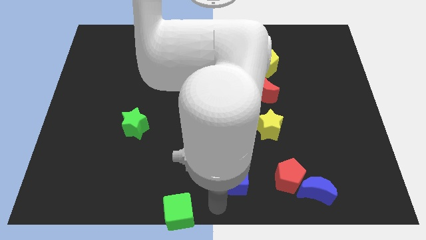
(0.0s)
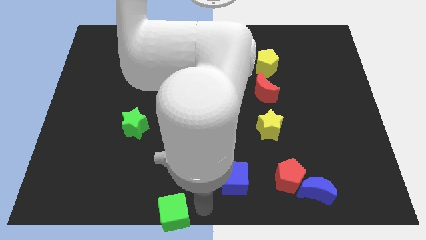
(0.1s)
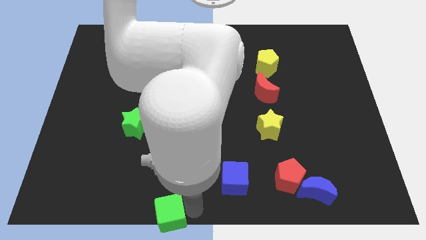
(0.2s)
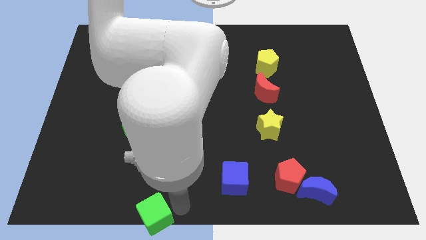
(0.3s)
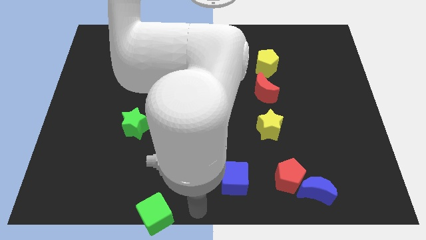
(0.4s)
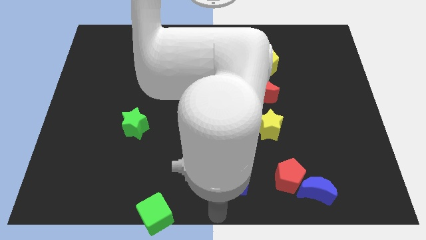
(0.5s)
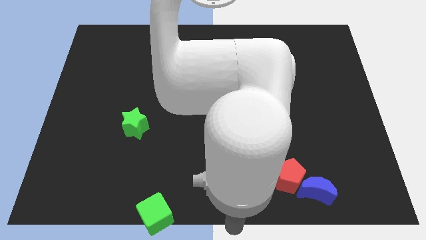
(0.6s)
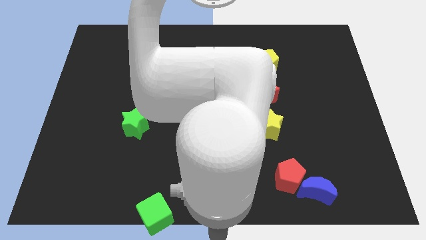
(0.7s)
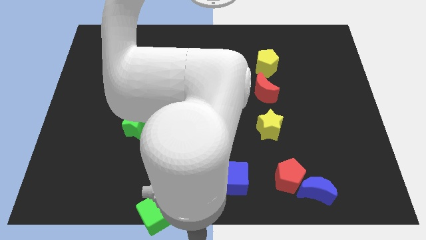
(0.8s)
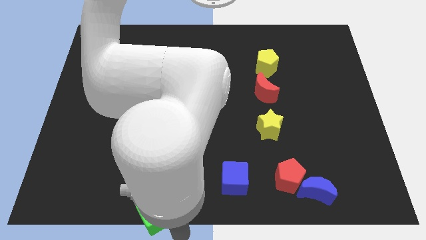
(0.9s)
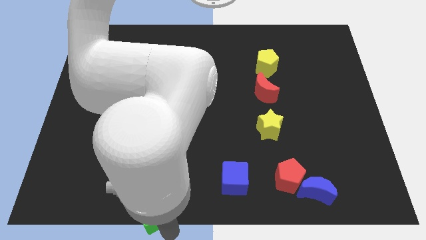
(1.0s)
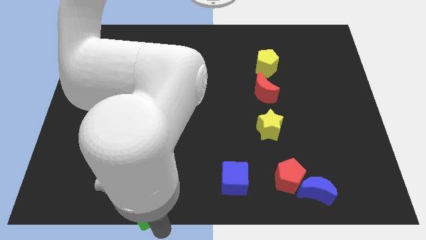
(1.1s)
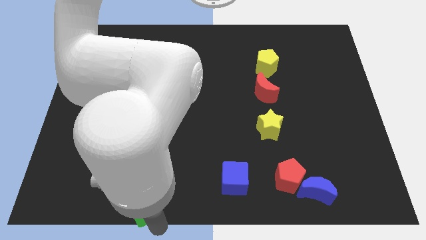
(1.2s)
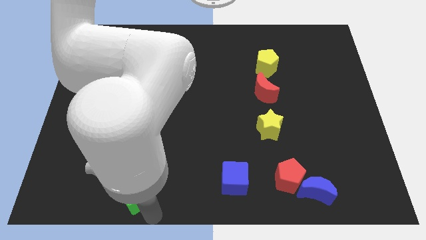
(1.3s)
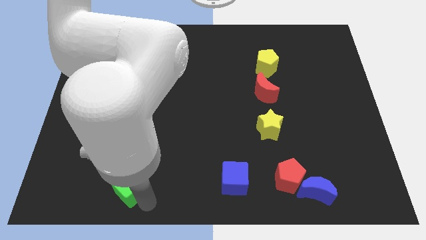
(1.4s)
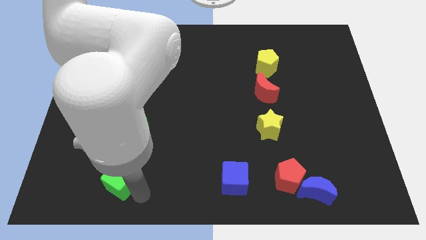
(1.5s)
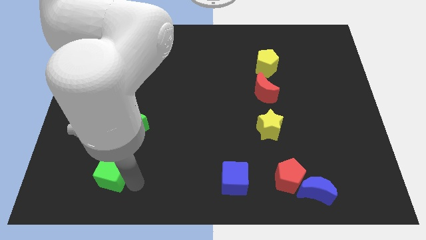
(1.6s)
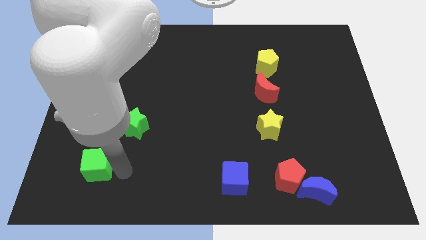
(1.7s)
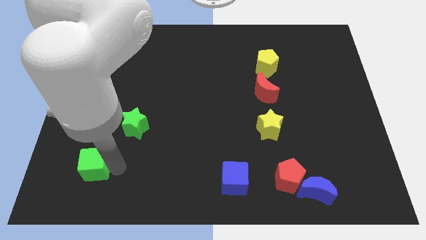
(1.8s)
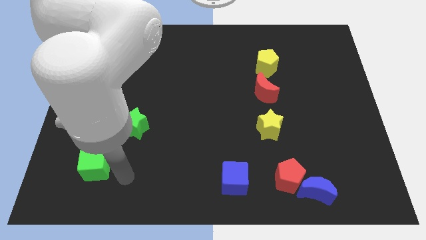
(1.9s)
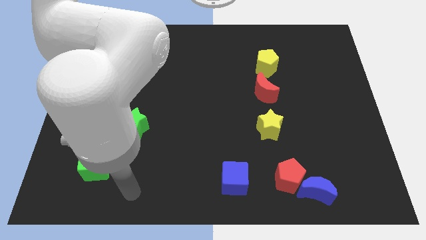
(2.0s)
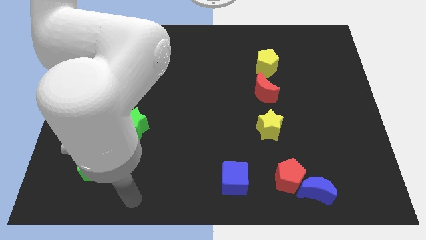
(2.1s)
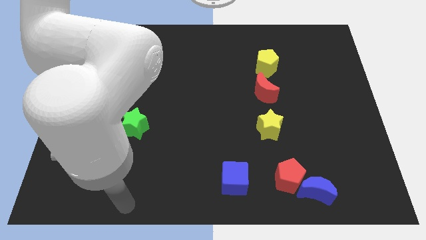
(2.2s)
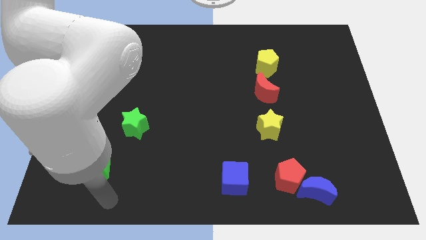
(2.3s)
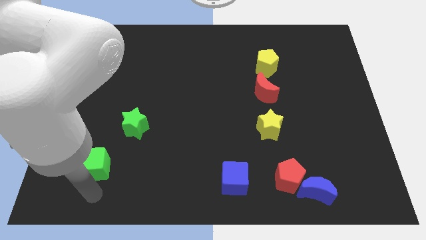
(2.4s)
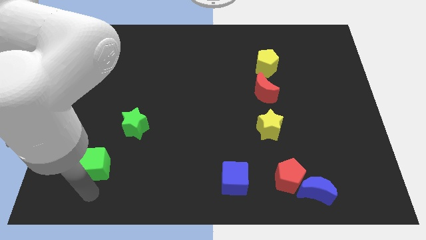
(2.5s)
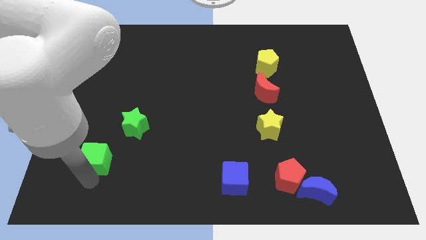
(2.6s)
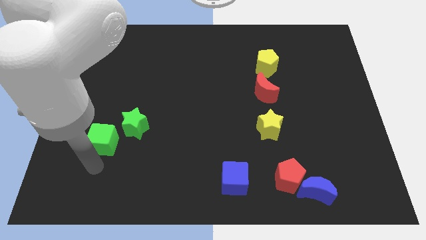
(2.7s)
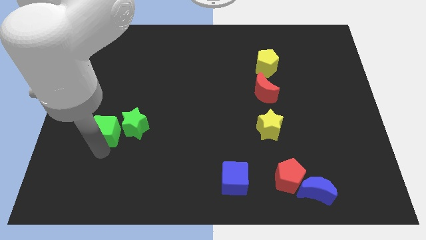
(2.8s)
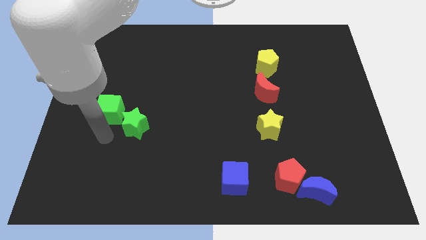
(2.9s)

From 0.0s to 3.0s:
place the green cube left to the green star

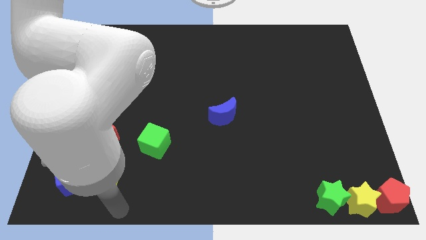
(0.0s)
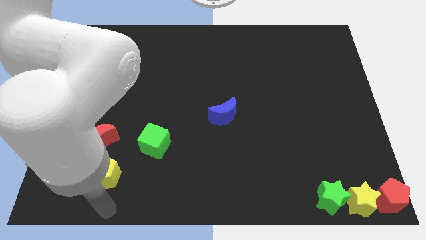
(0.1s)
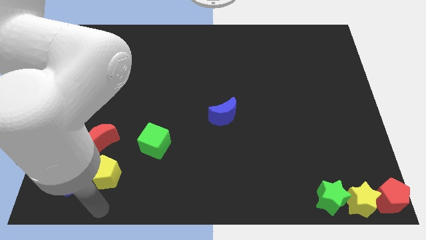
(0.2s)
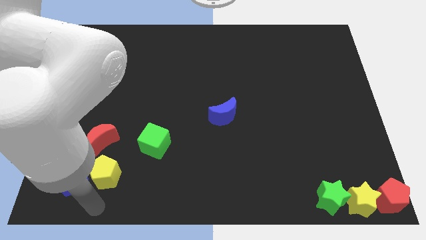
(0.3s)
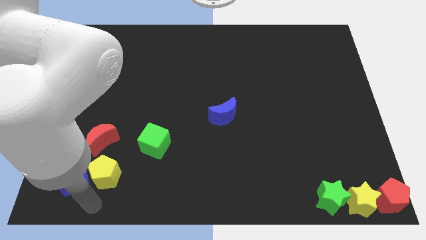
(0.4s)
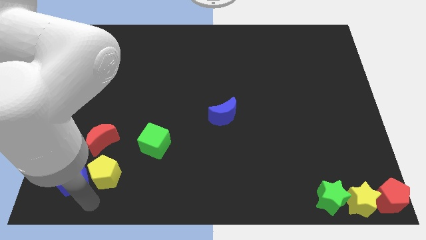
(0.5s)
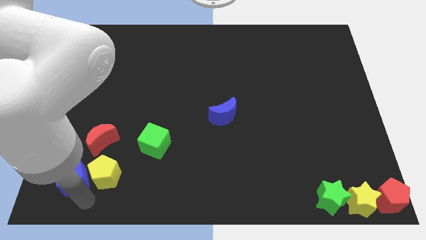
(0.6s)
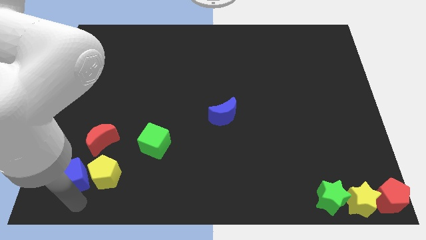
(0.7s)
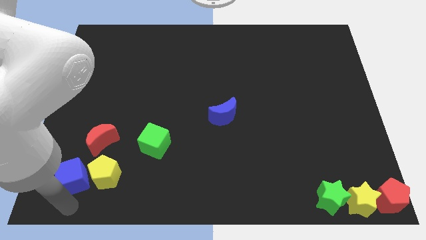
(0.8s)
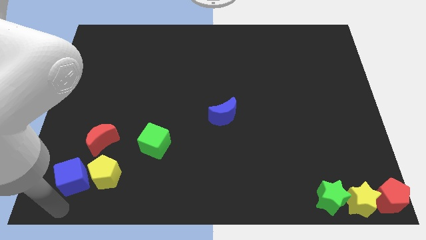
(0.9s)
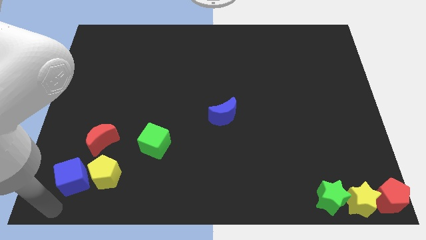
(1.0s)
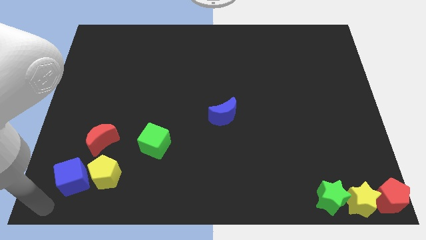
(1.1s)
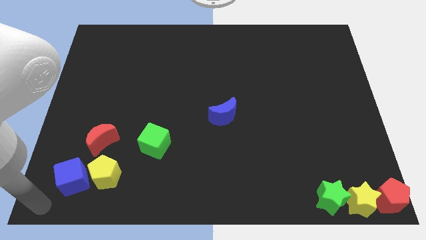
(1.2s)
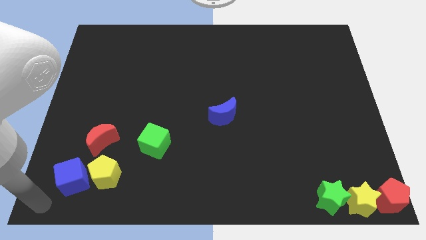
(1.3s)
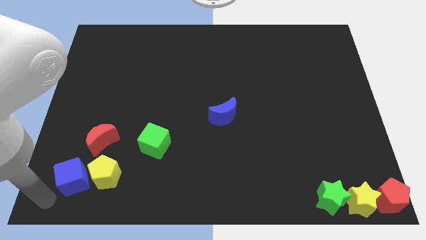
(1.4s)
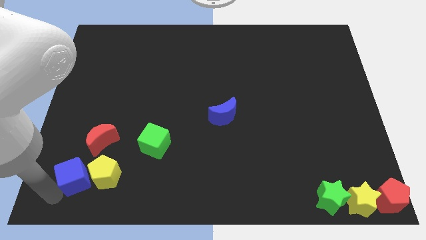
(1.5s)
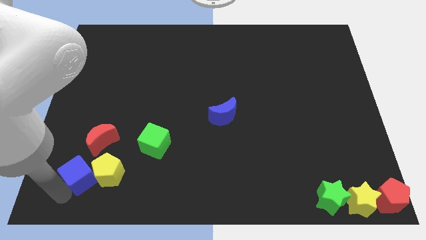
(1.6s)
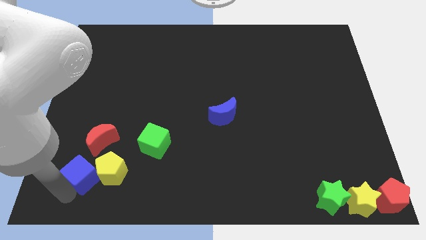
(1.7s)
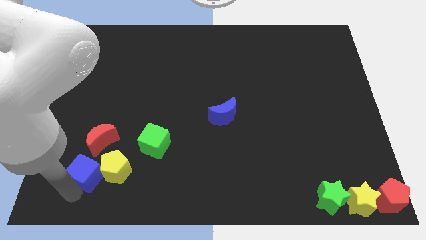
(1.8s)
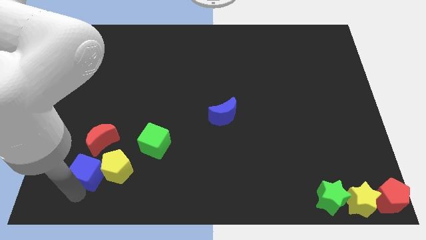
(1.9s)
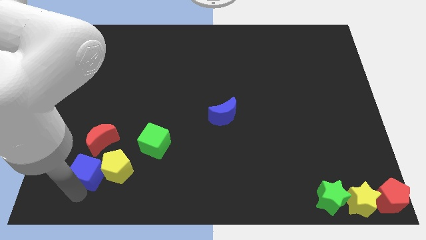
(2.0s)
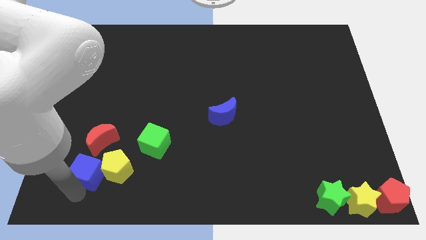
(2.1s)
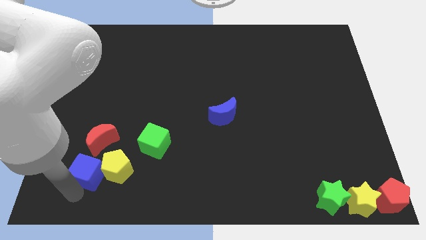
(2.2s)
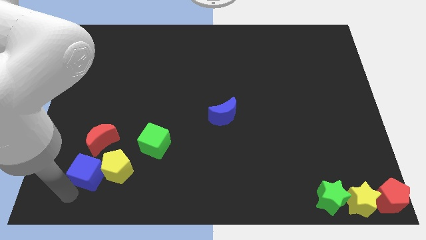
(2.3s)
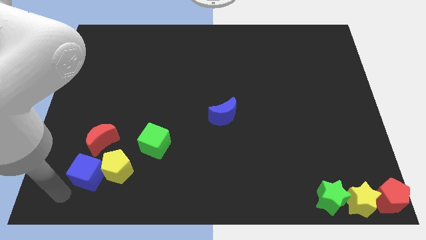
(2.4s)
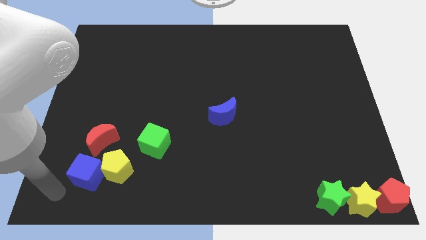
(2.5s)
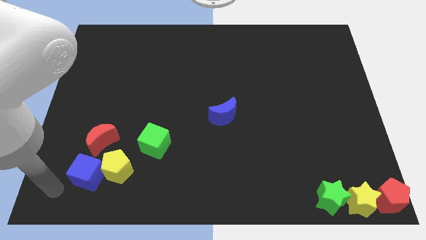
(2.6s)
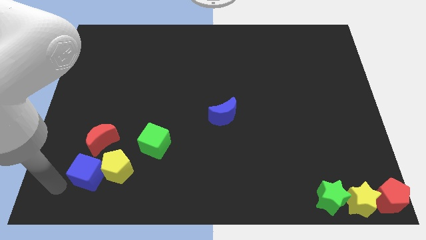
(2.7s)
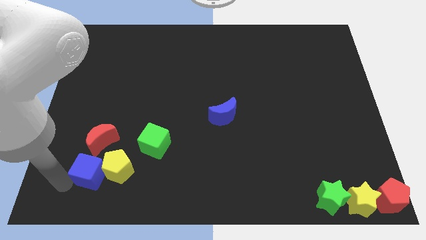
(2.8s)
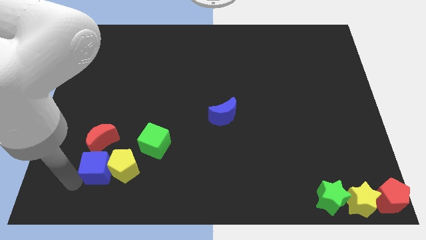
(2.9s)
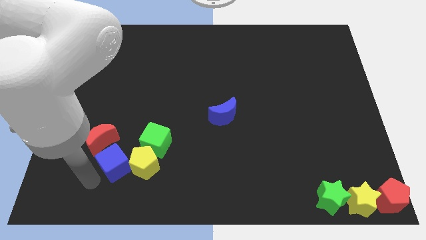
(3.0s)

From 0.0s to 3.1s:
push the yellow pentagon slightly with blue cube

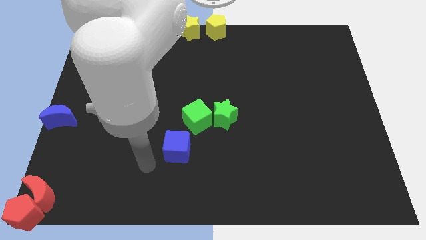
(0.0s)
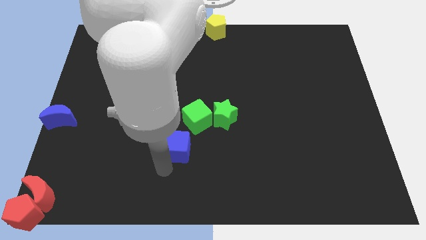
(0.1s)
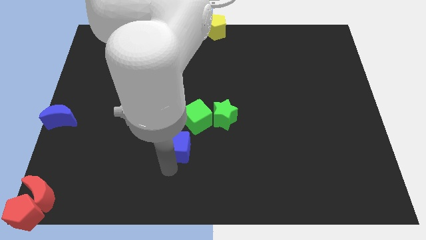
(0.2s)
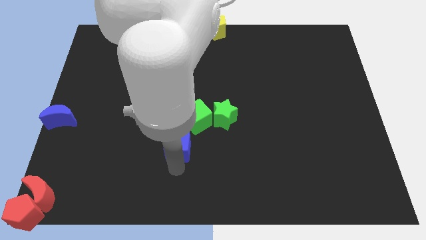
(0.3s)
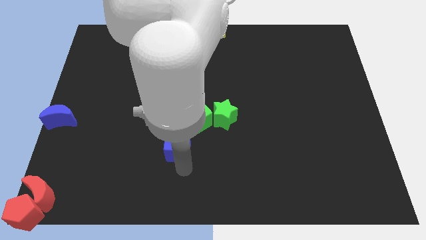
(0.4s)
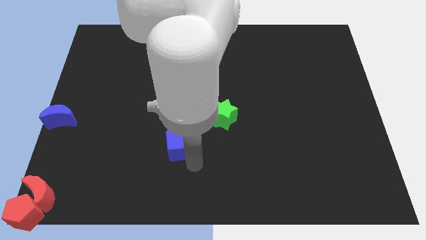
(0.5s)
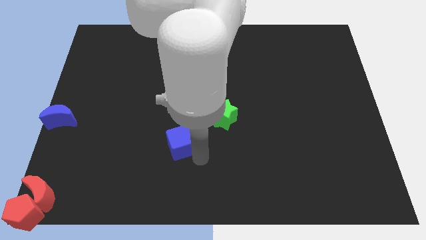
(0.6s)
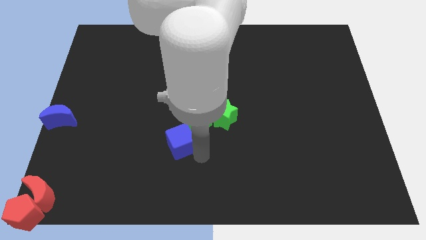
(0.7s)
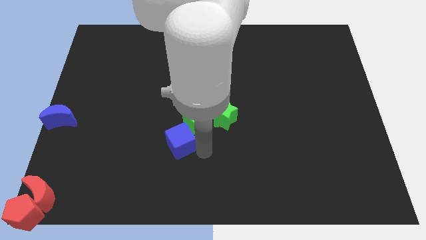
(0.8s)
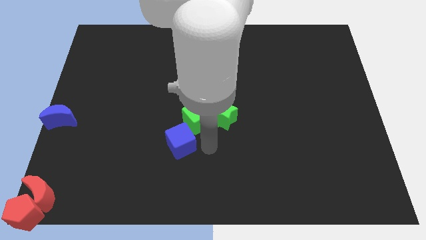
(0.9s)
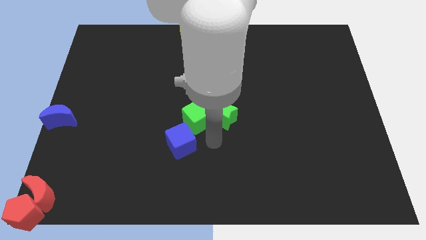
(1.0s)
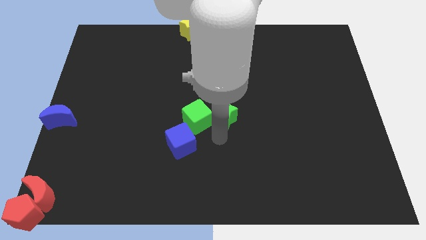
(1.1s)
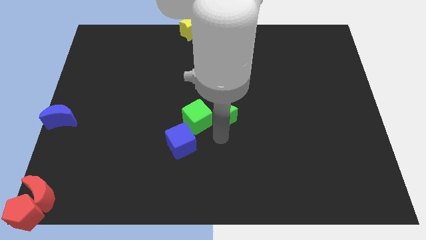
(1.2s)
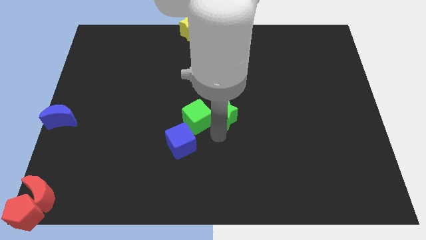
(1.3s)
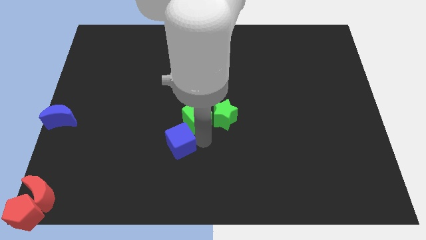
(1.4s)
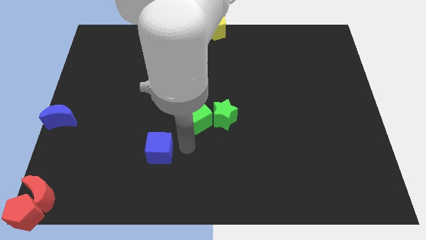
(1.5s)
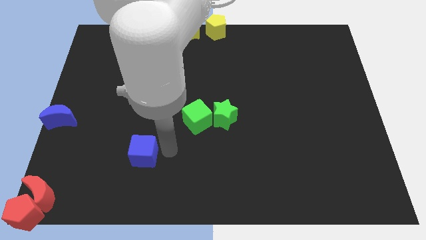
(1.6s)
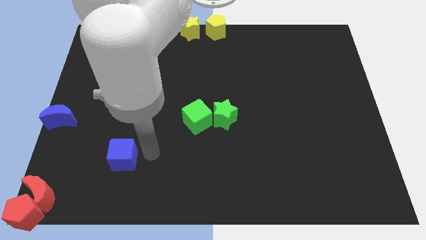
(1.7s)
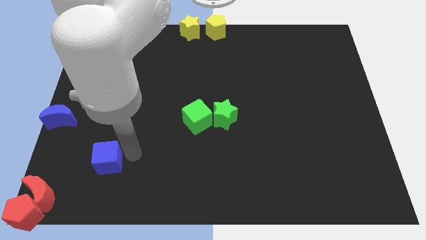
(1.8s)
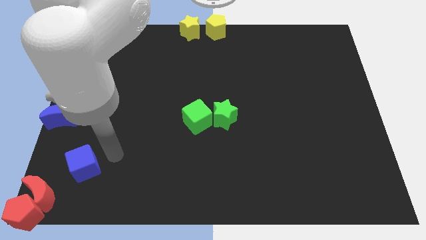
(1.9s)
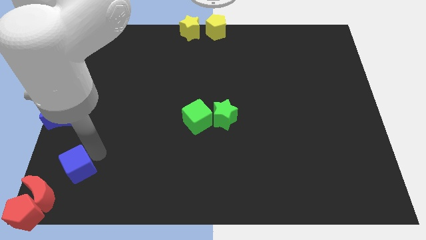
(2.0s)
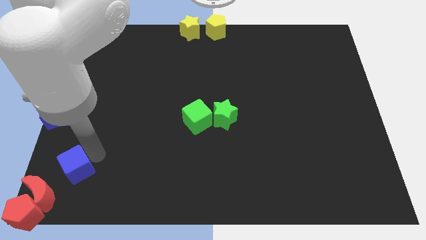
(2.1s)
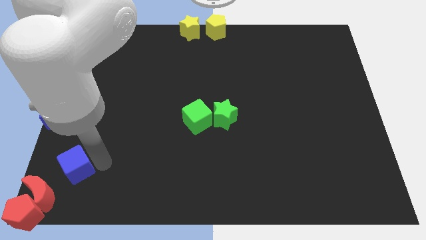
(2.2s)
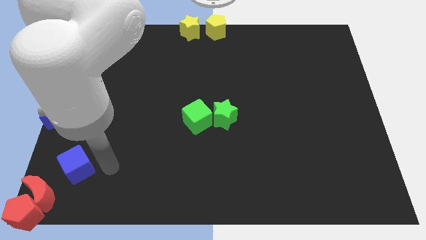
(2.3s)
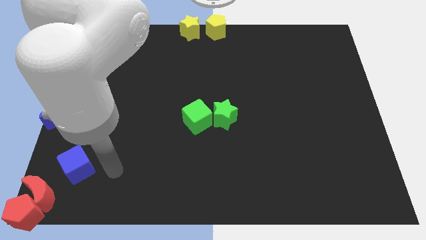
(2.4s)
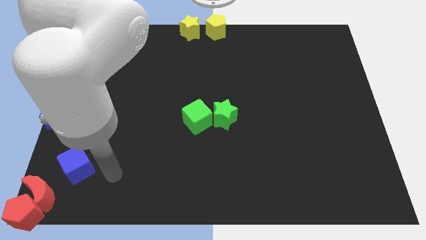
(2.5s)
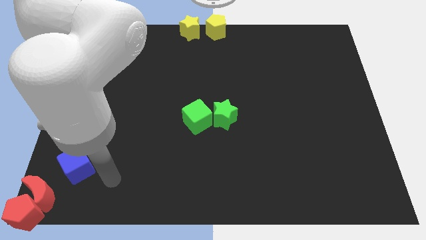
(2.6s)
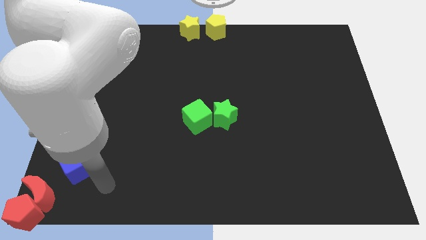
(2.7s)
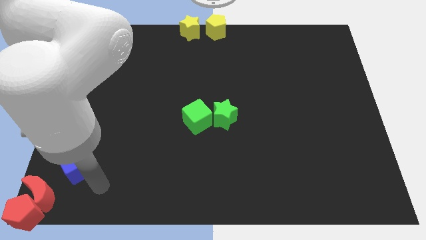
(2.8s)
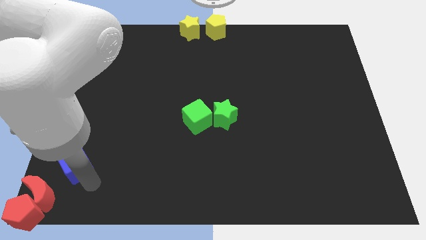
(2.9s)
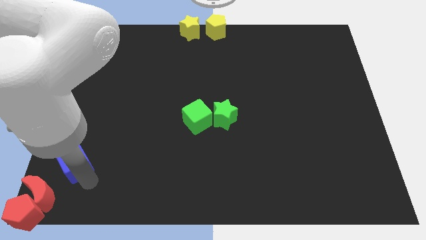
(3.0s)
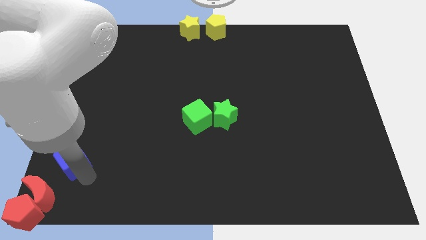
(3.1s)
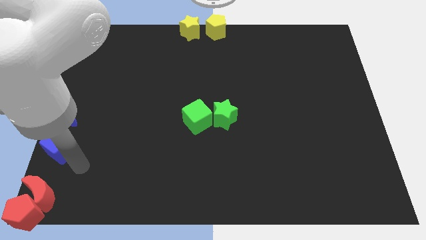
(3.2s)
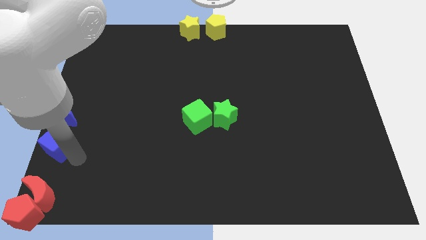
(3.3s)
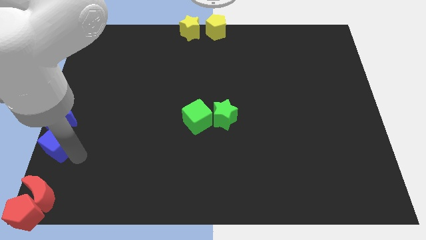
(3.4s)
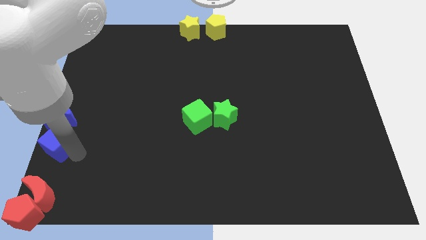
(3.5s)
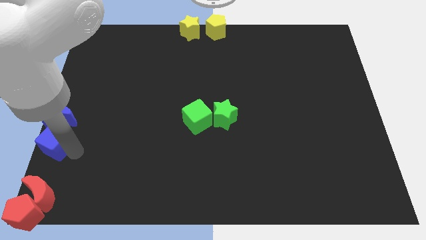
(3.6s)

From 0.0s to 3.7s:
slide the blue cube to the bottom side of the blue crescent
